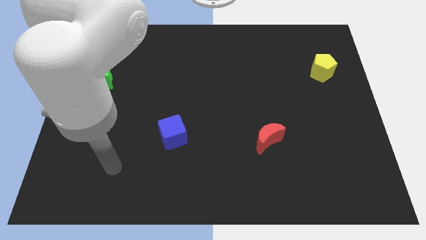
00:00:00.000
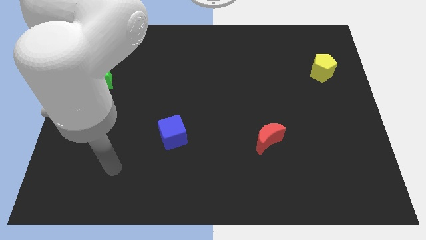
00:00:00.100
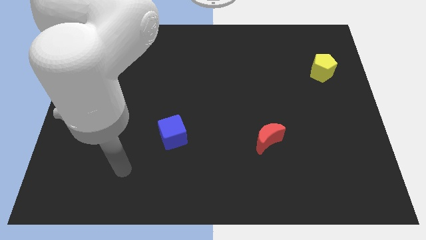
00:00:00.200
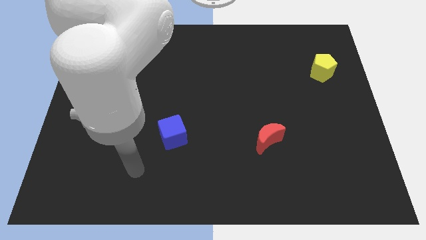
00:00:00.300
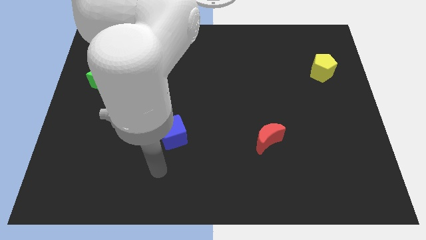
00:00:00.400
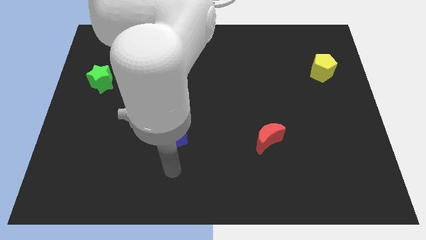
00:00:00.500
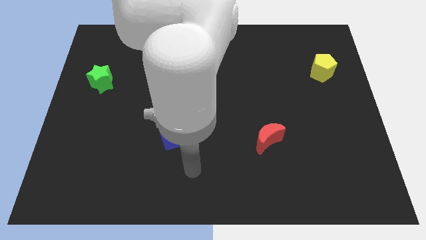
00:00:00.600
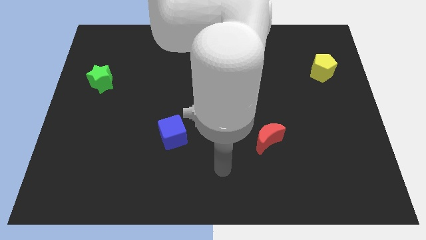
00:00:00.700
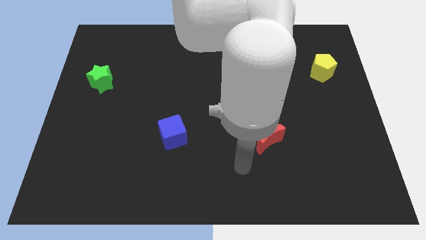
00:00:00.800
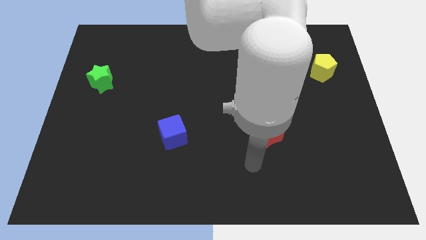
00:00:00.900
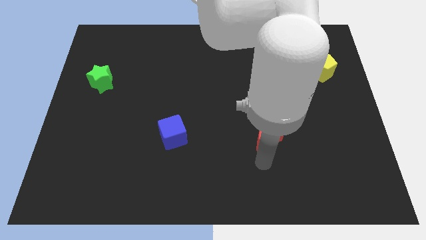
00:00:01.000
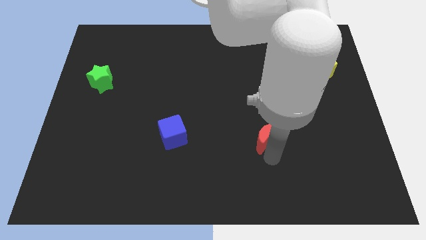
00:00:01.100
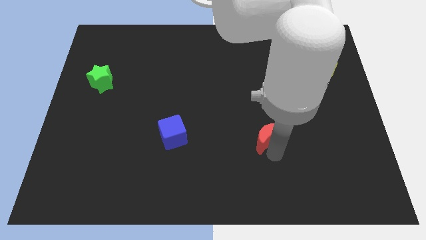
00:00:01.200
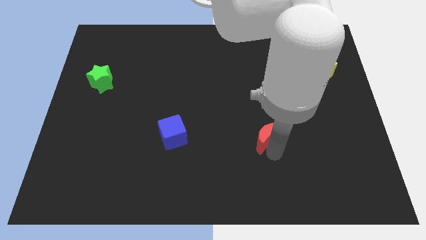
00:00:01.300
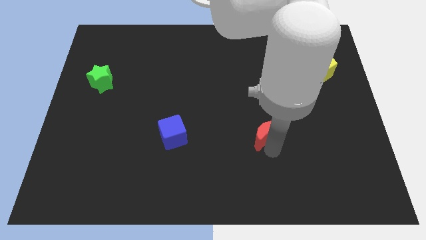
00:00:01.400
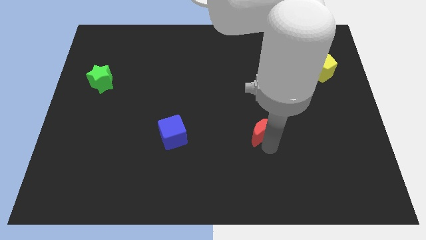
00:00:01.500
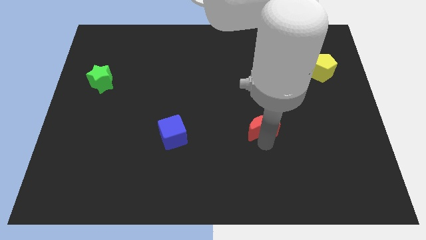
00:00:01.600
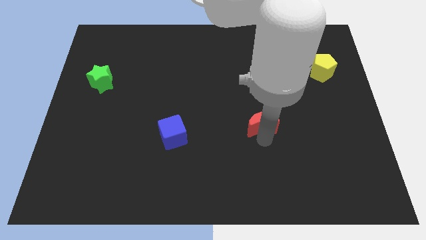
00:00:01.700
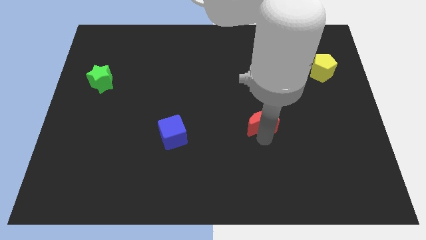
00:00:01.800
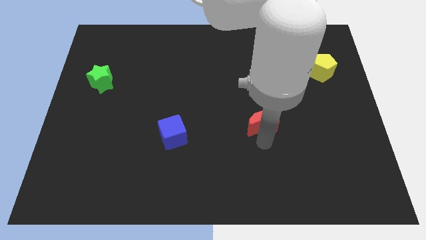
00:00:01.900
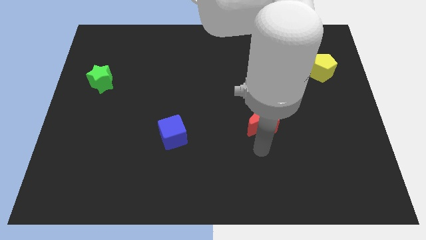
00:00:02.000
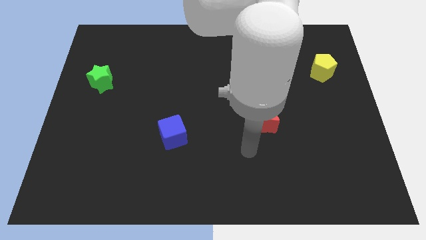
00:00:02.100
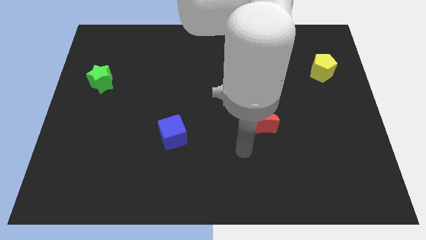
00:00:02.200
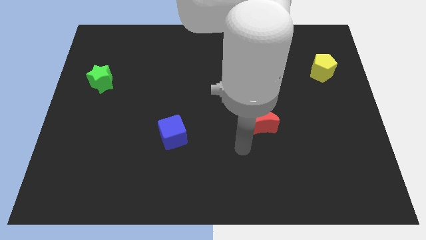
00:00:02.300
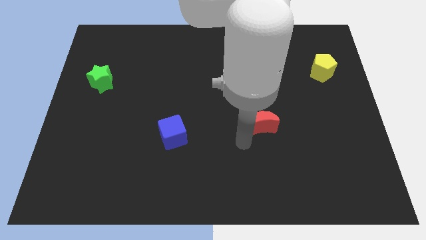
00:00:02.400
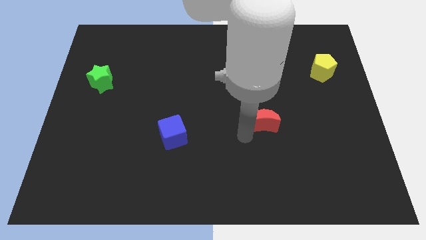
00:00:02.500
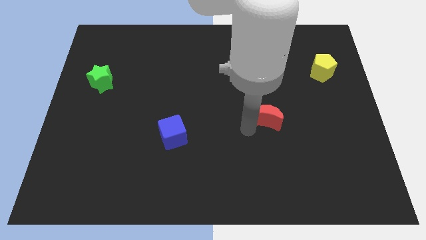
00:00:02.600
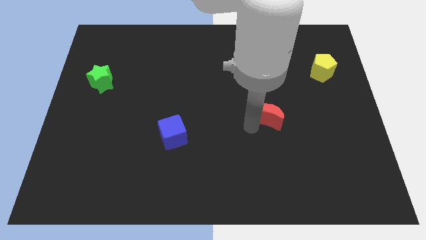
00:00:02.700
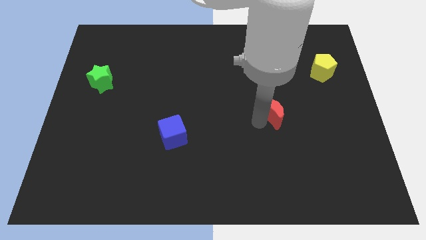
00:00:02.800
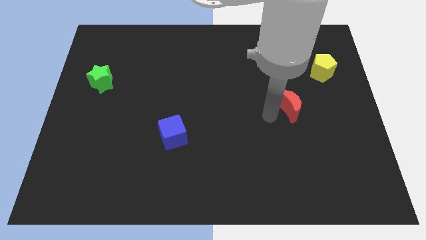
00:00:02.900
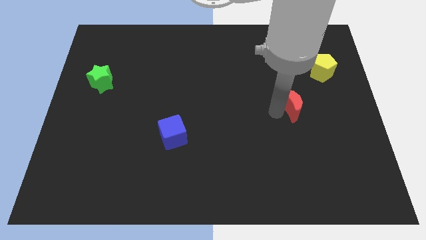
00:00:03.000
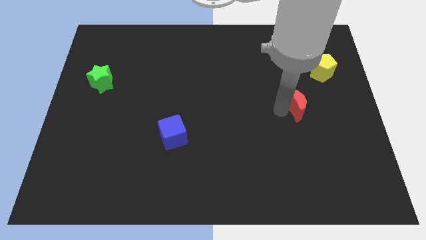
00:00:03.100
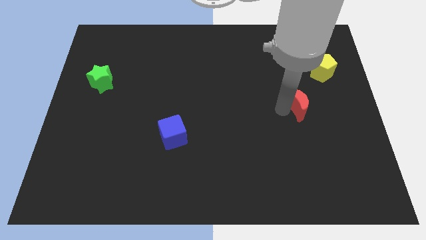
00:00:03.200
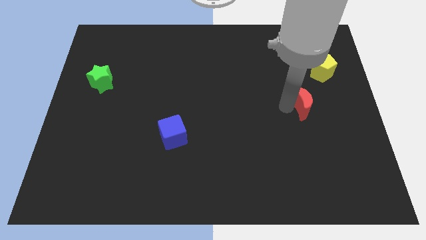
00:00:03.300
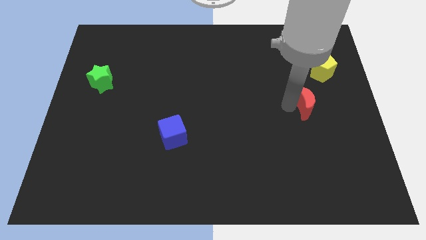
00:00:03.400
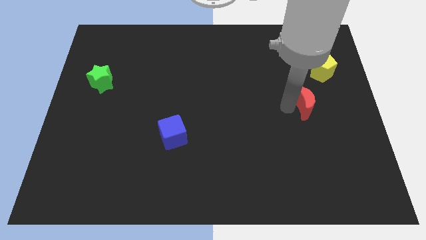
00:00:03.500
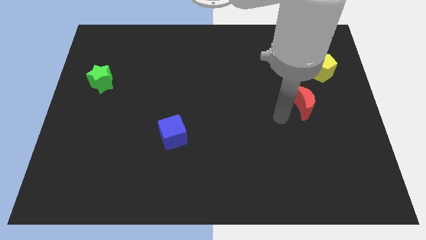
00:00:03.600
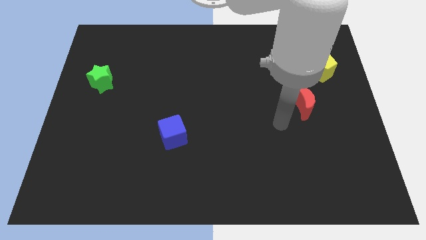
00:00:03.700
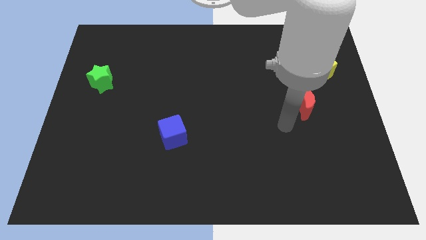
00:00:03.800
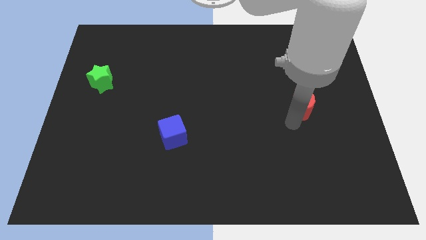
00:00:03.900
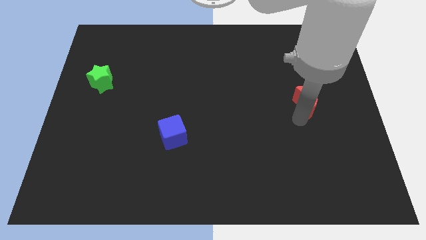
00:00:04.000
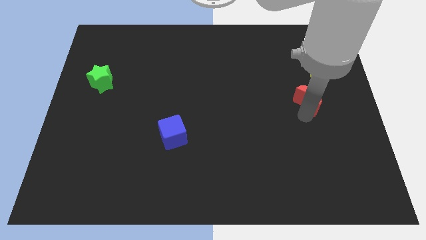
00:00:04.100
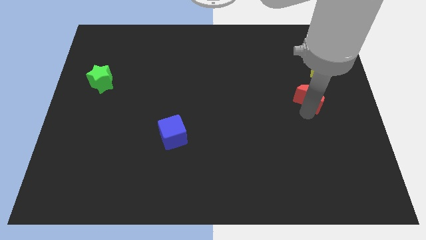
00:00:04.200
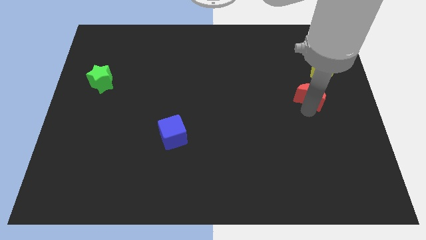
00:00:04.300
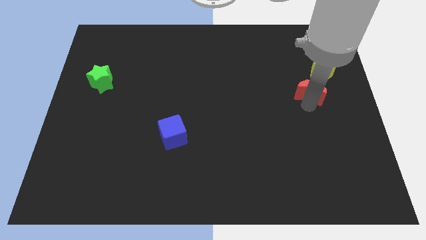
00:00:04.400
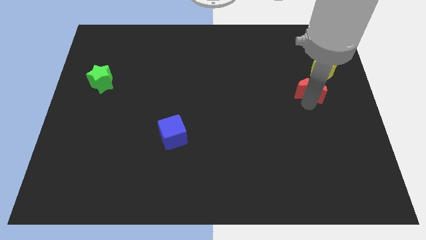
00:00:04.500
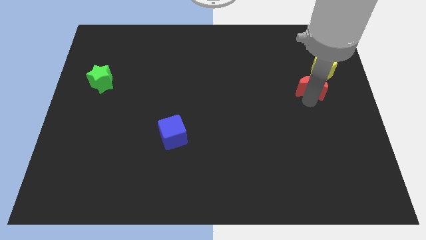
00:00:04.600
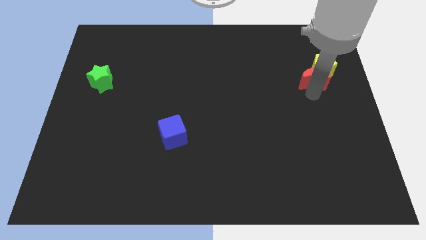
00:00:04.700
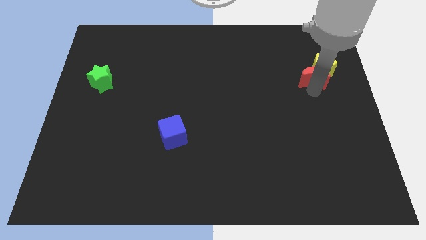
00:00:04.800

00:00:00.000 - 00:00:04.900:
put the red block towards the yellow block

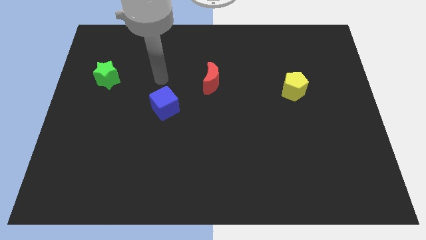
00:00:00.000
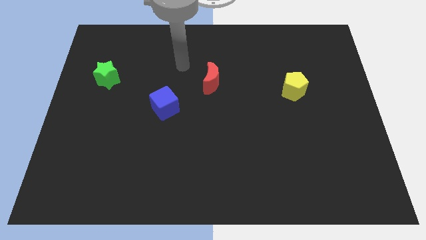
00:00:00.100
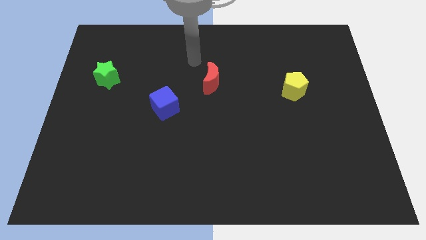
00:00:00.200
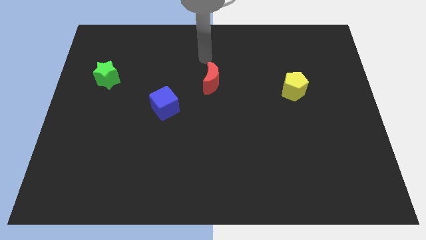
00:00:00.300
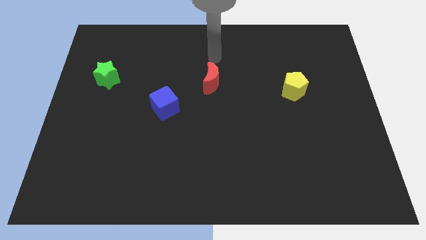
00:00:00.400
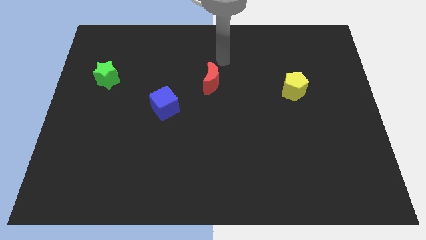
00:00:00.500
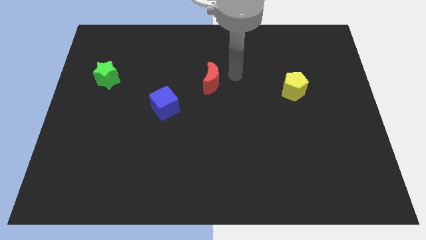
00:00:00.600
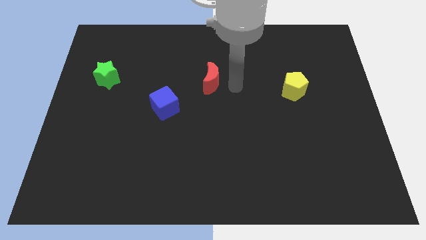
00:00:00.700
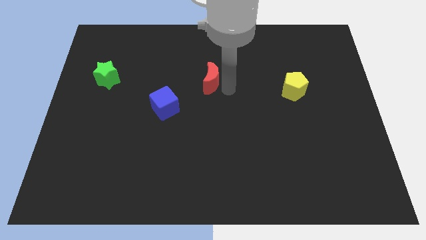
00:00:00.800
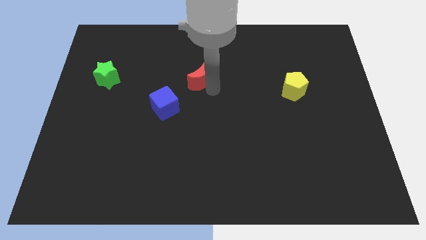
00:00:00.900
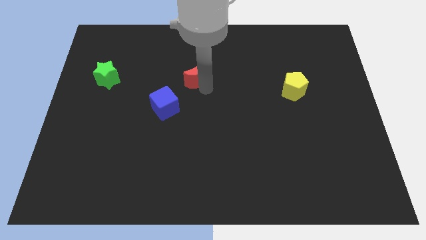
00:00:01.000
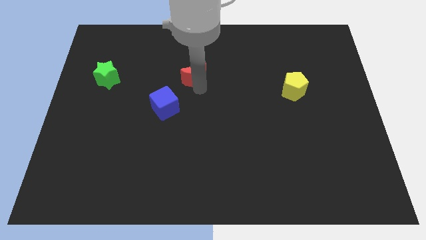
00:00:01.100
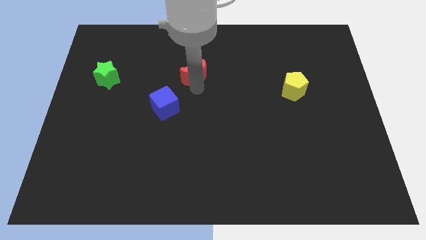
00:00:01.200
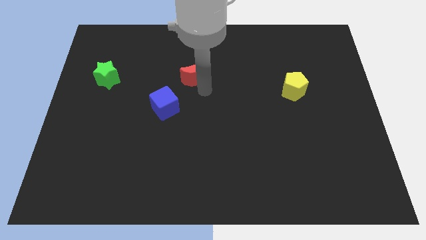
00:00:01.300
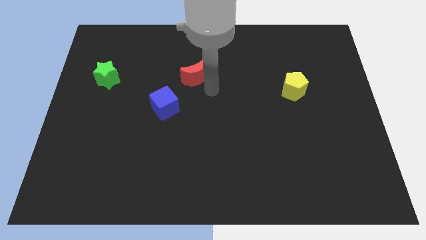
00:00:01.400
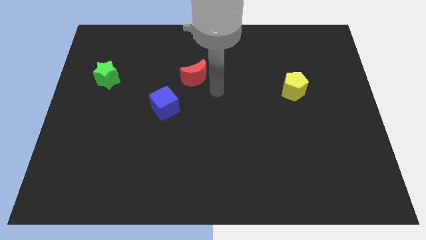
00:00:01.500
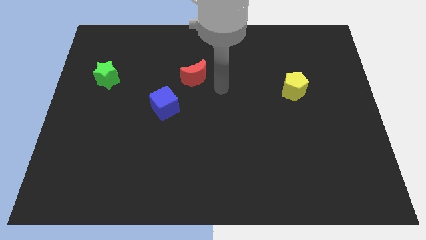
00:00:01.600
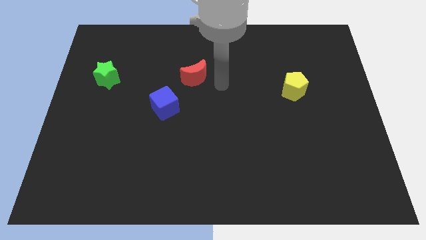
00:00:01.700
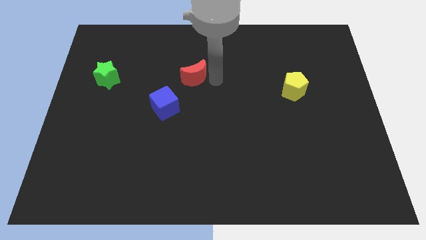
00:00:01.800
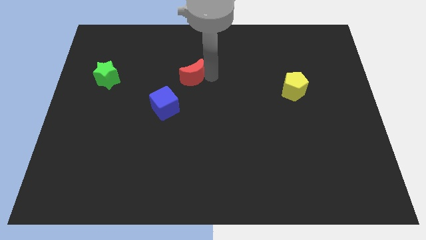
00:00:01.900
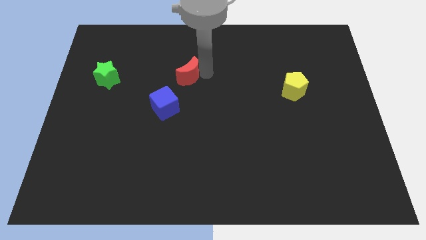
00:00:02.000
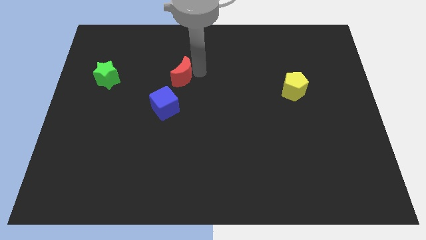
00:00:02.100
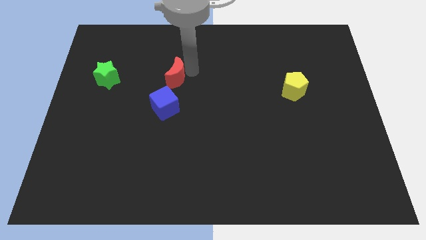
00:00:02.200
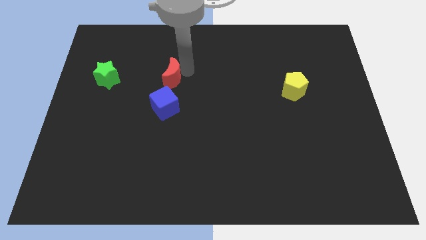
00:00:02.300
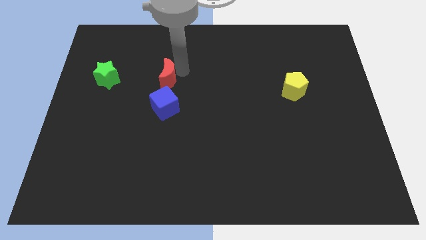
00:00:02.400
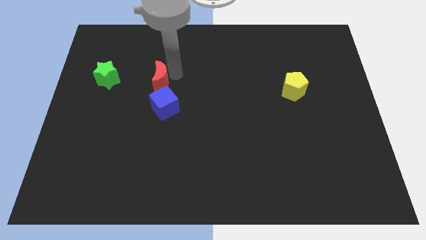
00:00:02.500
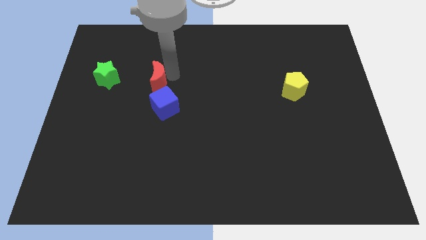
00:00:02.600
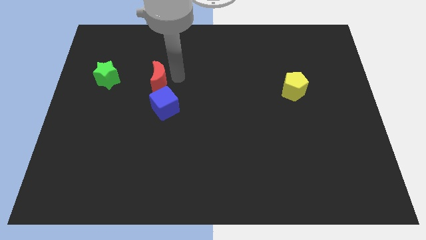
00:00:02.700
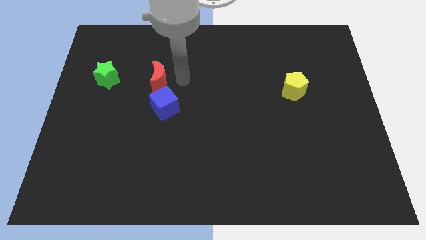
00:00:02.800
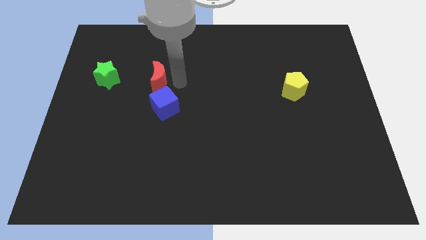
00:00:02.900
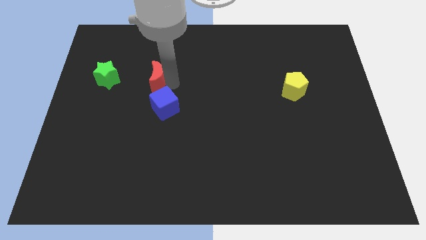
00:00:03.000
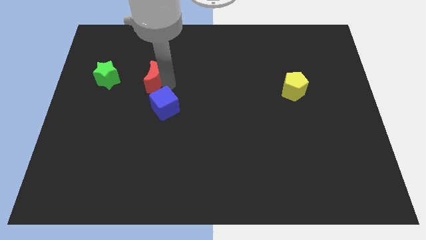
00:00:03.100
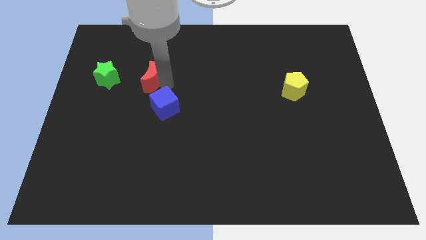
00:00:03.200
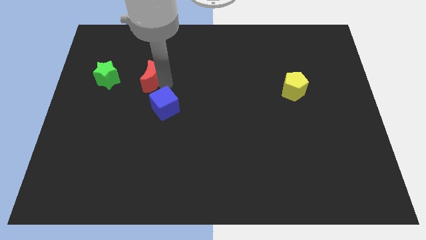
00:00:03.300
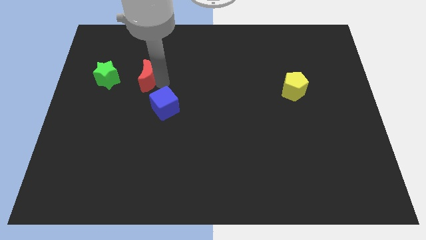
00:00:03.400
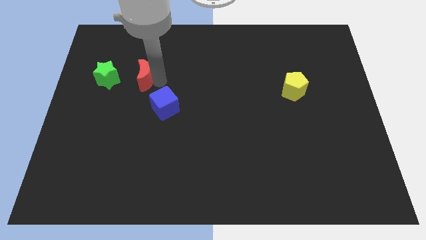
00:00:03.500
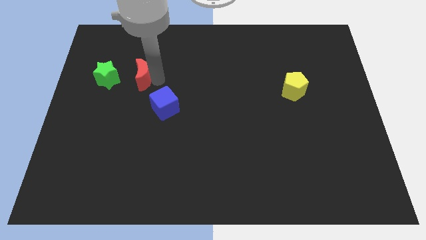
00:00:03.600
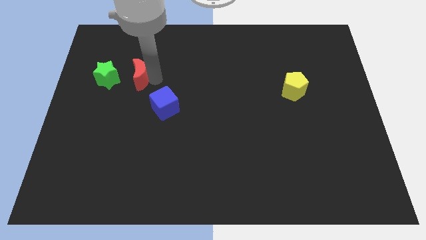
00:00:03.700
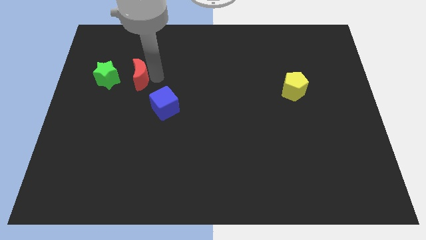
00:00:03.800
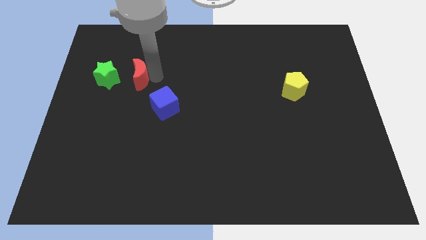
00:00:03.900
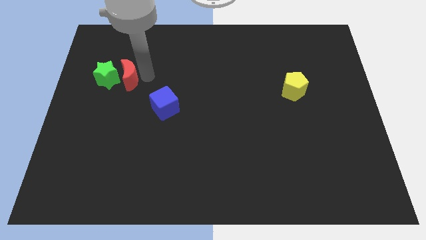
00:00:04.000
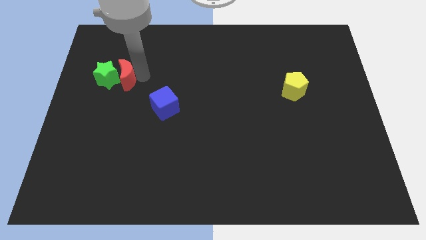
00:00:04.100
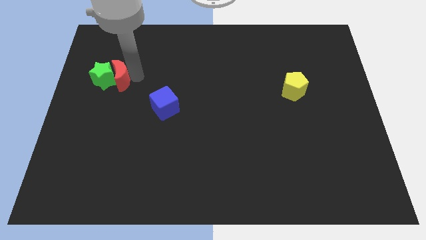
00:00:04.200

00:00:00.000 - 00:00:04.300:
push the moon to the green star
